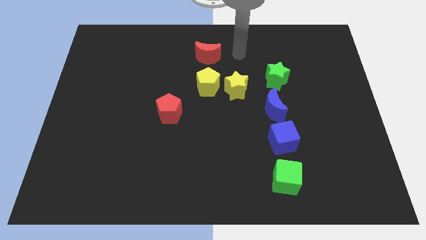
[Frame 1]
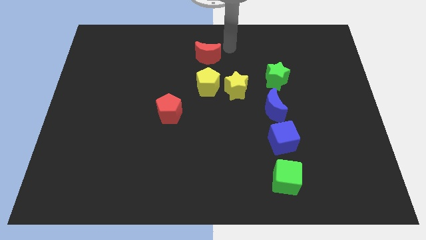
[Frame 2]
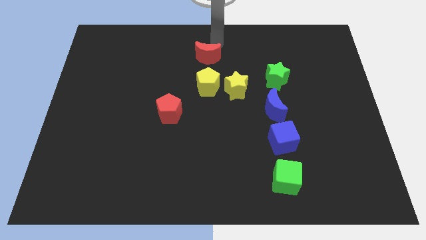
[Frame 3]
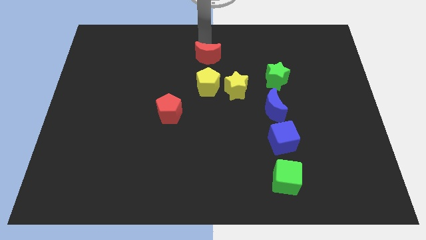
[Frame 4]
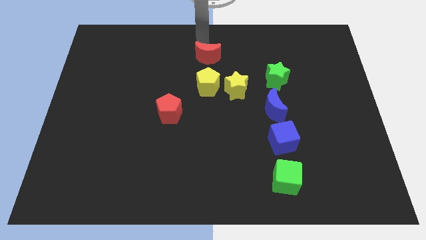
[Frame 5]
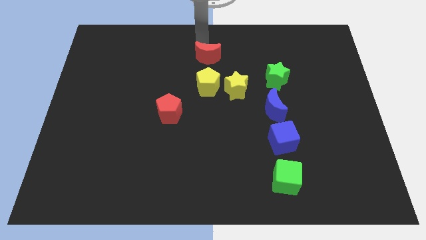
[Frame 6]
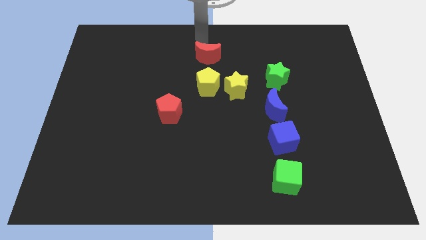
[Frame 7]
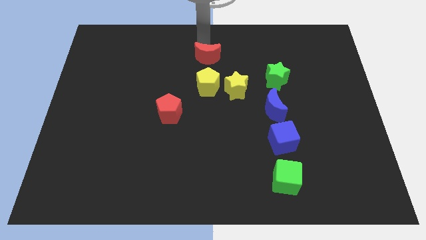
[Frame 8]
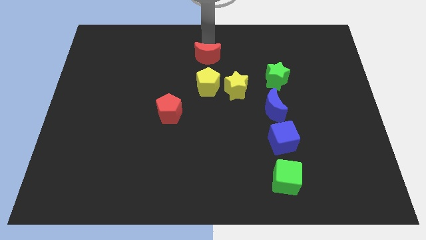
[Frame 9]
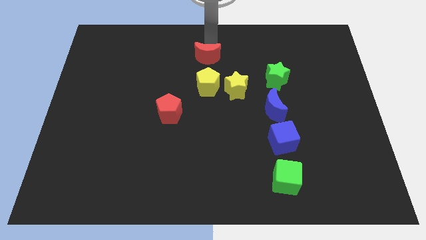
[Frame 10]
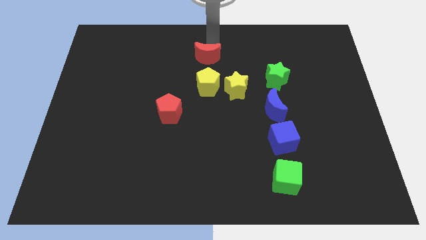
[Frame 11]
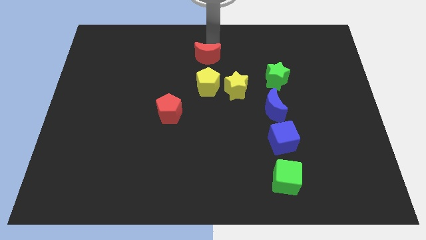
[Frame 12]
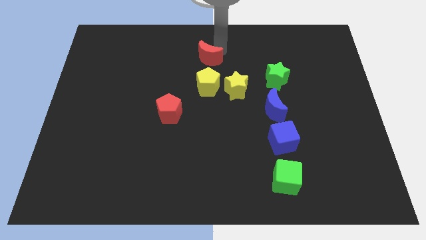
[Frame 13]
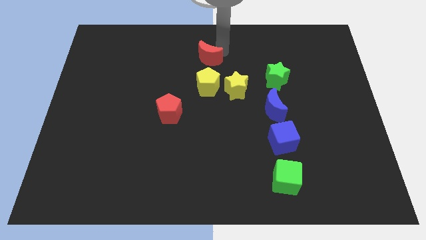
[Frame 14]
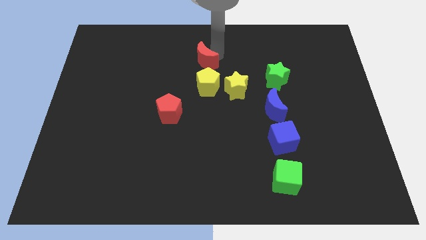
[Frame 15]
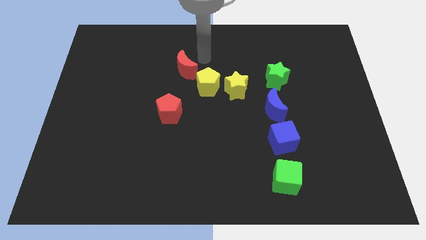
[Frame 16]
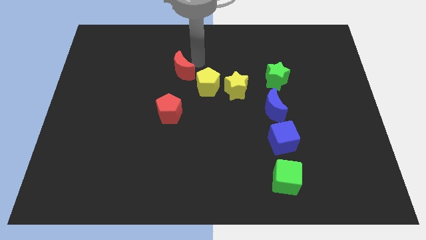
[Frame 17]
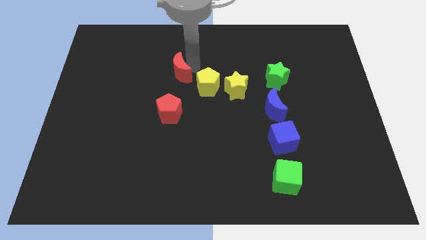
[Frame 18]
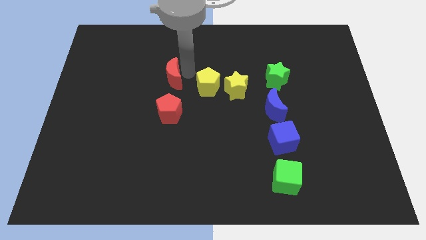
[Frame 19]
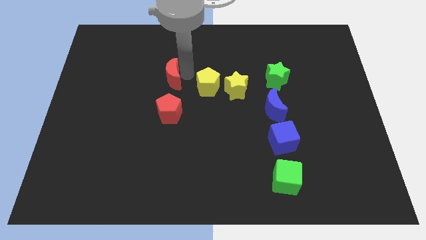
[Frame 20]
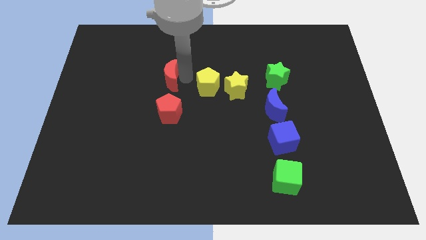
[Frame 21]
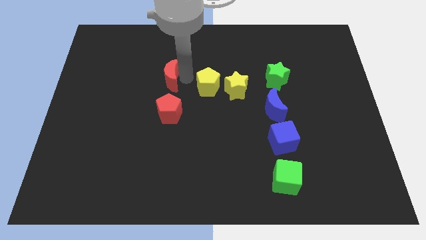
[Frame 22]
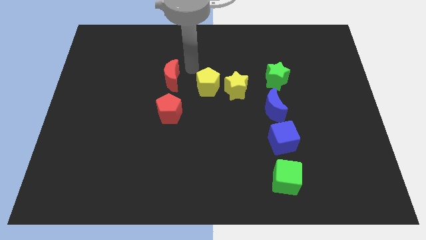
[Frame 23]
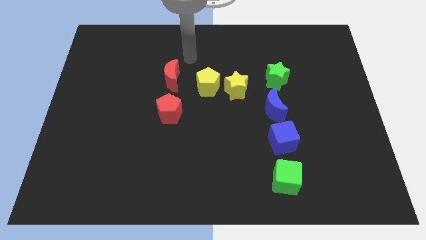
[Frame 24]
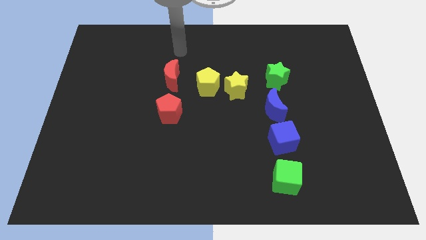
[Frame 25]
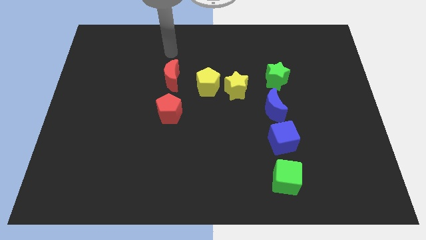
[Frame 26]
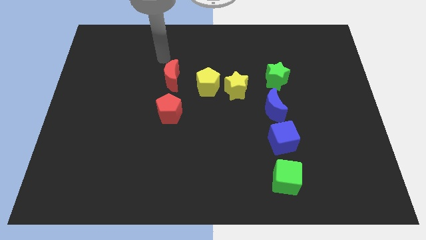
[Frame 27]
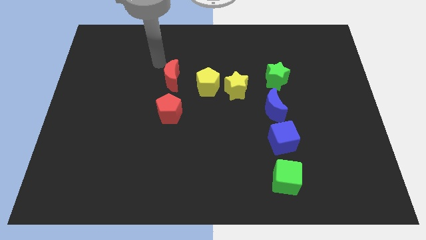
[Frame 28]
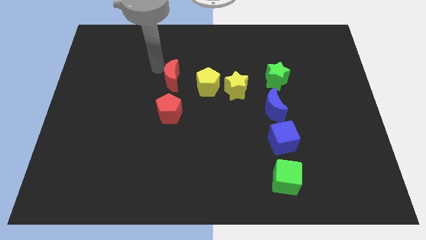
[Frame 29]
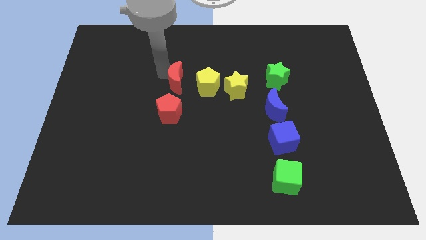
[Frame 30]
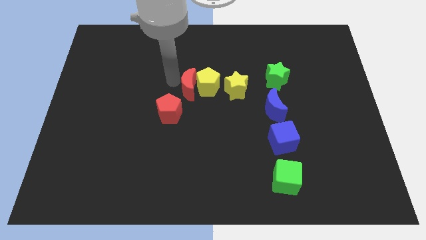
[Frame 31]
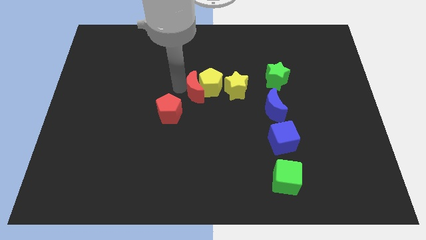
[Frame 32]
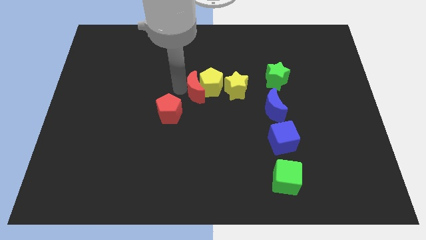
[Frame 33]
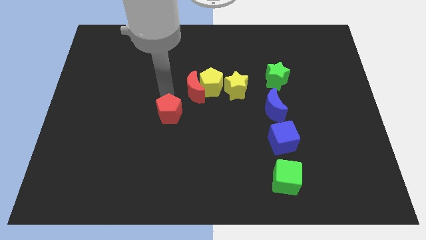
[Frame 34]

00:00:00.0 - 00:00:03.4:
push the red crescent into the yellow pentagon

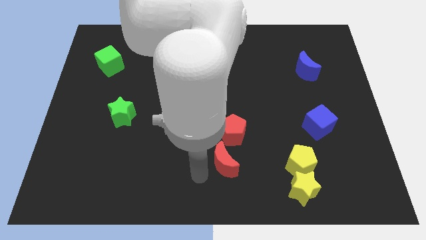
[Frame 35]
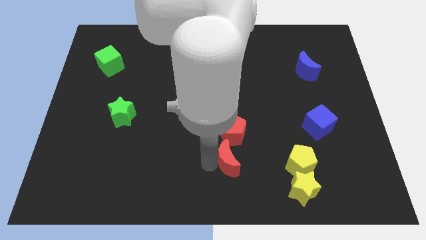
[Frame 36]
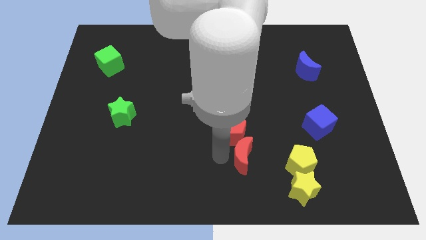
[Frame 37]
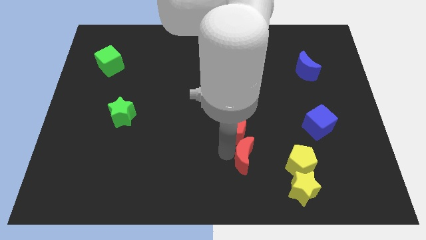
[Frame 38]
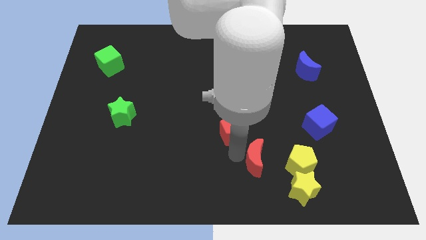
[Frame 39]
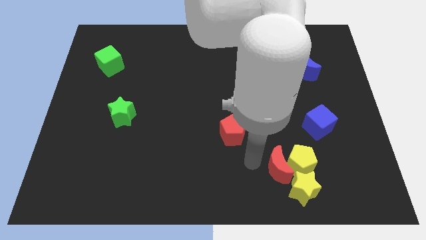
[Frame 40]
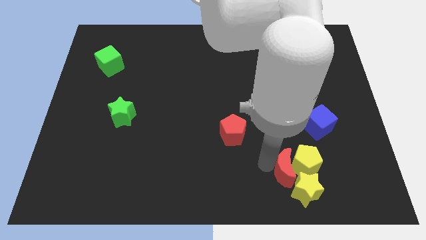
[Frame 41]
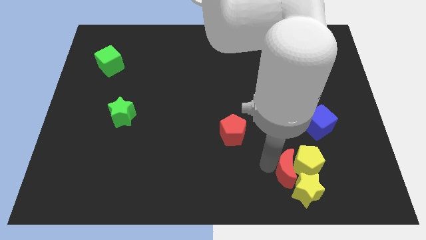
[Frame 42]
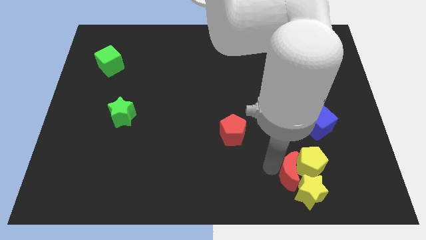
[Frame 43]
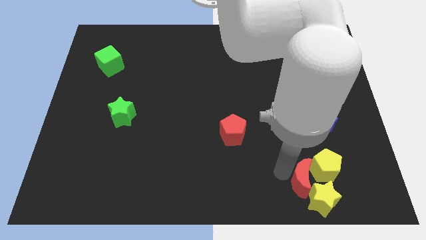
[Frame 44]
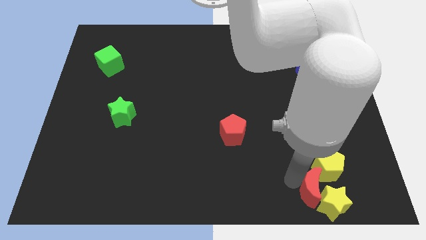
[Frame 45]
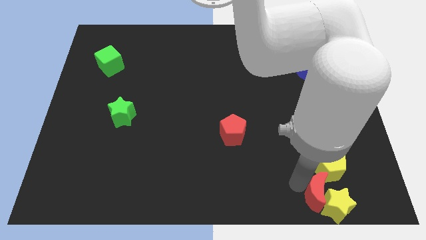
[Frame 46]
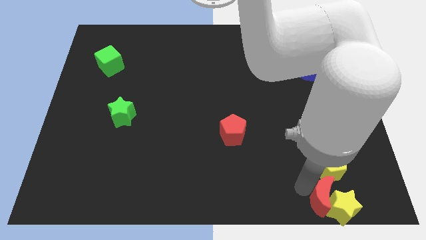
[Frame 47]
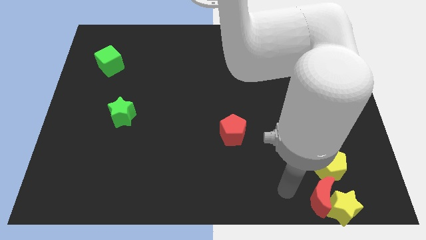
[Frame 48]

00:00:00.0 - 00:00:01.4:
push the red moon into the yellow pentagon and yellow star

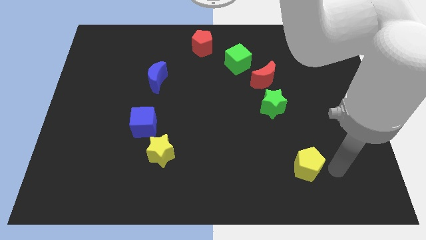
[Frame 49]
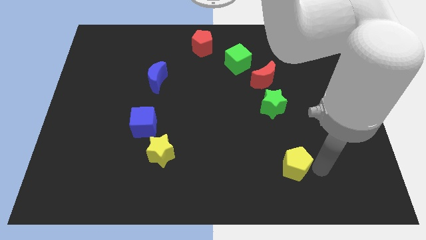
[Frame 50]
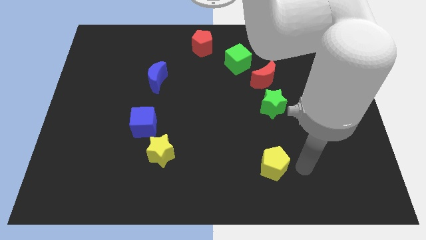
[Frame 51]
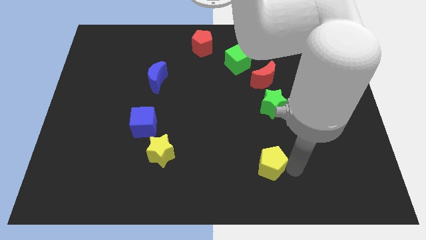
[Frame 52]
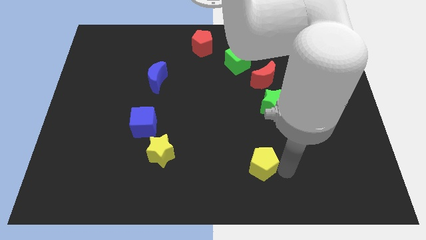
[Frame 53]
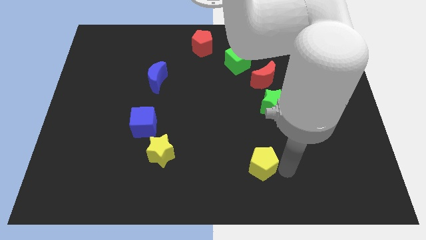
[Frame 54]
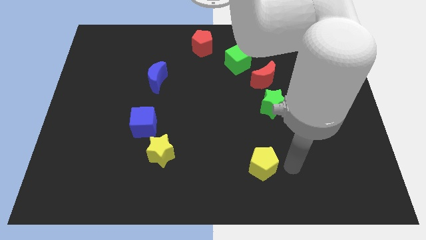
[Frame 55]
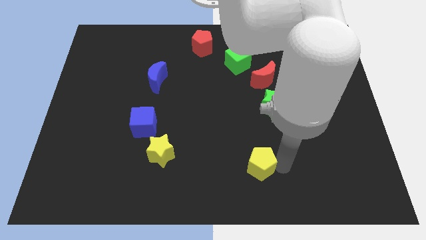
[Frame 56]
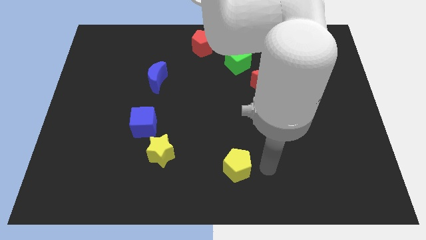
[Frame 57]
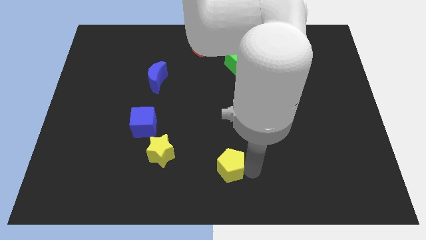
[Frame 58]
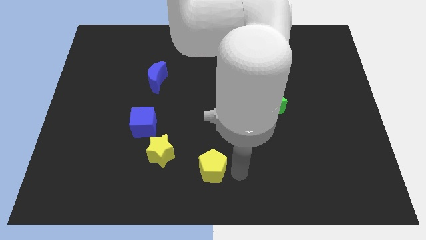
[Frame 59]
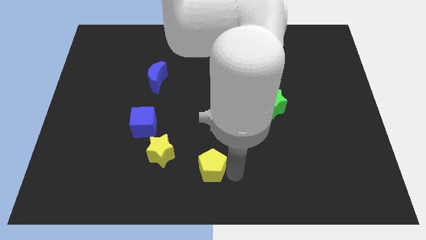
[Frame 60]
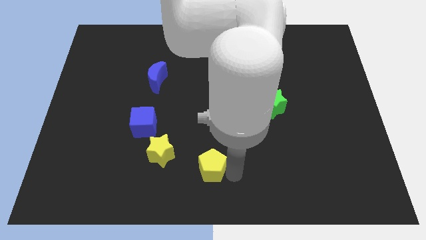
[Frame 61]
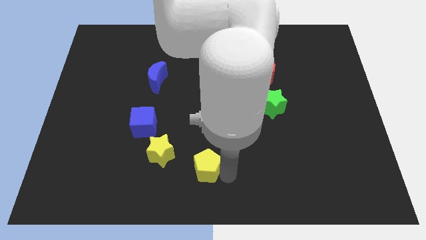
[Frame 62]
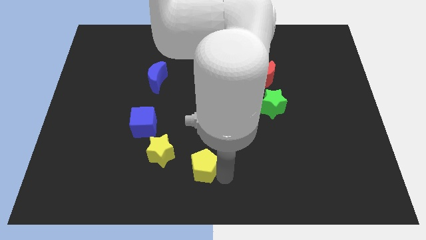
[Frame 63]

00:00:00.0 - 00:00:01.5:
move the yellow pentagon to the bottom center

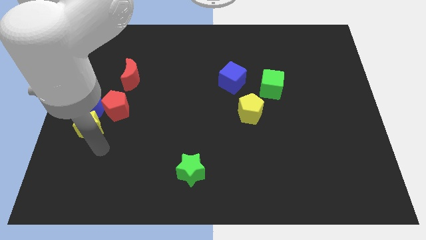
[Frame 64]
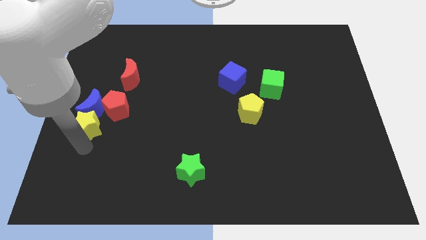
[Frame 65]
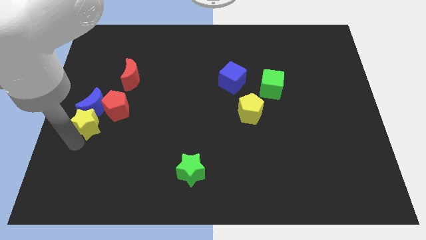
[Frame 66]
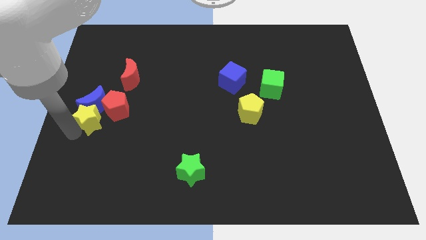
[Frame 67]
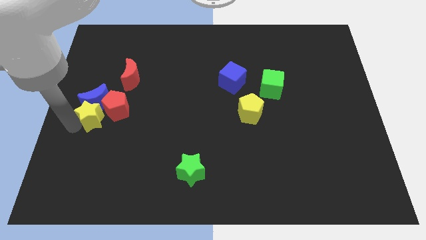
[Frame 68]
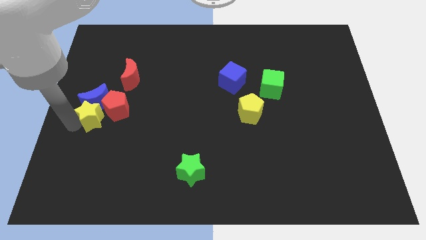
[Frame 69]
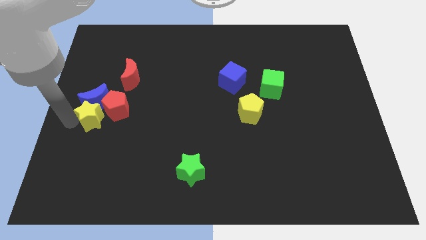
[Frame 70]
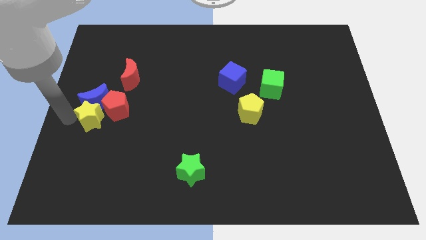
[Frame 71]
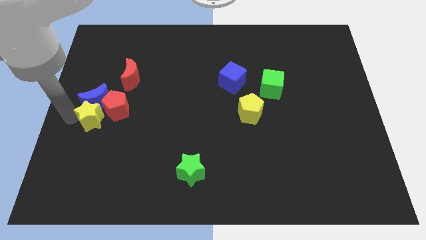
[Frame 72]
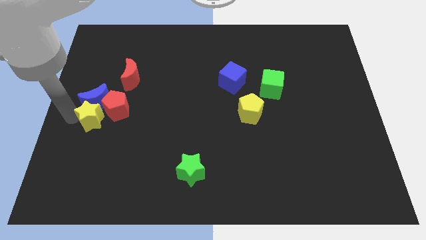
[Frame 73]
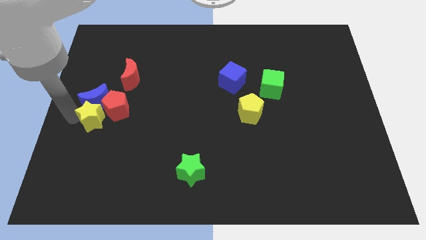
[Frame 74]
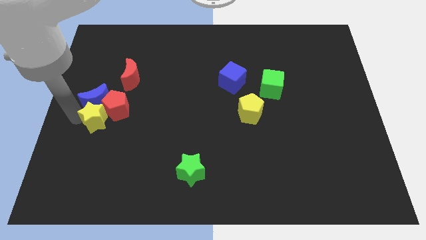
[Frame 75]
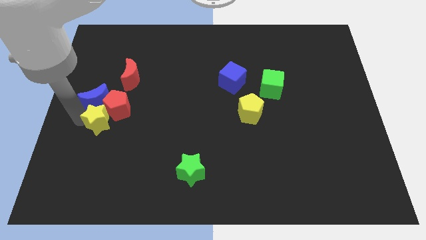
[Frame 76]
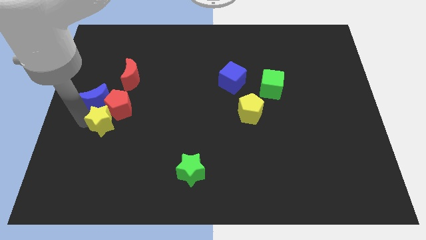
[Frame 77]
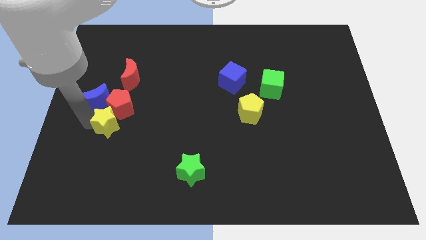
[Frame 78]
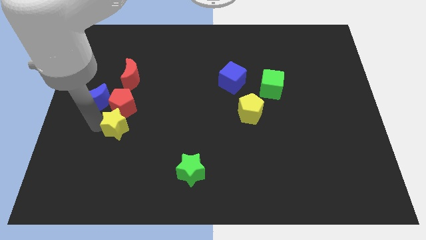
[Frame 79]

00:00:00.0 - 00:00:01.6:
place yellow star to the bottom of red pentagon

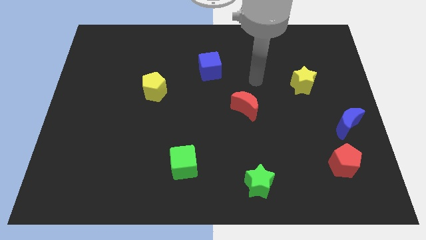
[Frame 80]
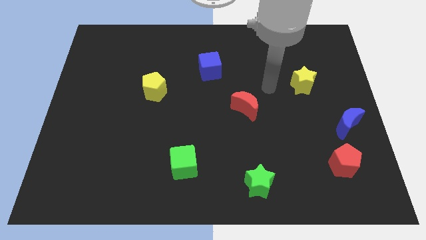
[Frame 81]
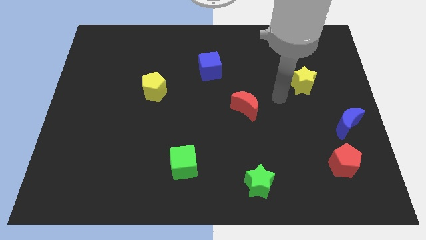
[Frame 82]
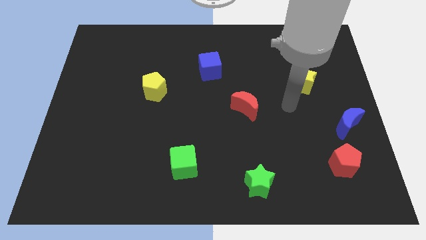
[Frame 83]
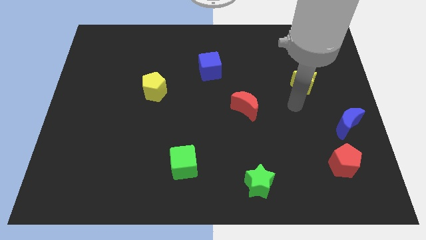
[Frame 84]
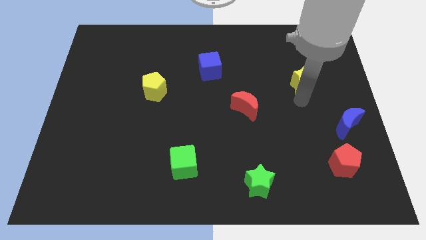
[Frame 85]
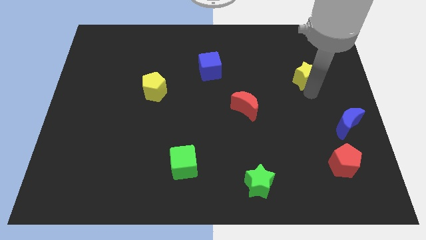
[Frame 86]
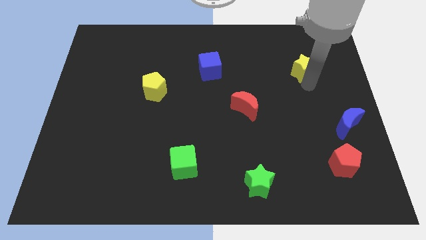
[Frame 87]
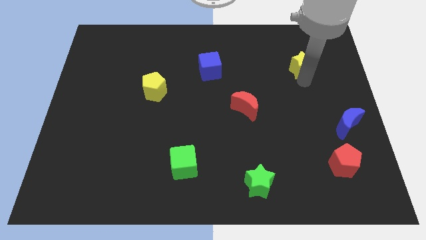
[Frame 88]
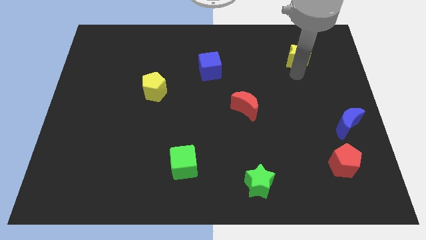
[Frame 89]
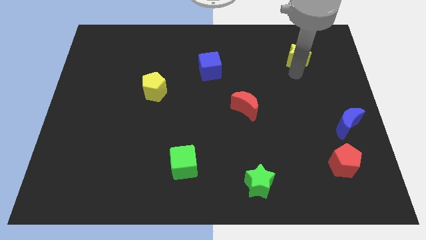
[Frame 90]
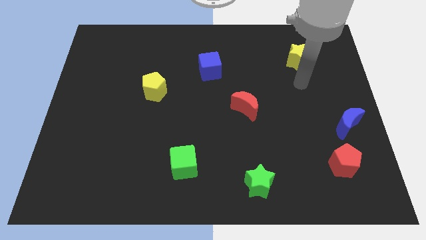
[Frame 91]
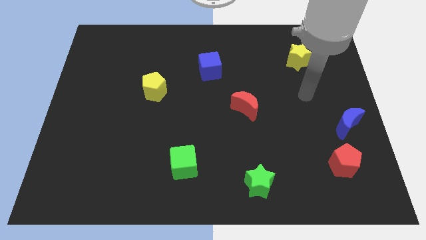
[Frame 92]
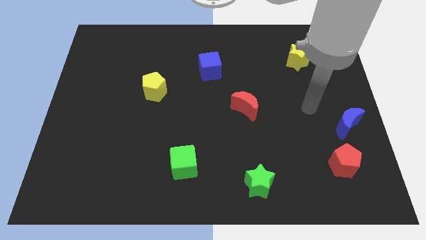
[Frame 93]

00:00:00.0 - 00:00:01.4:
move the yellow star to the top side of the board
